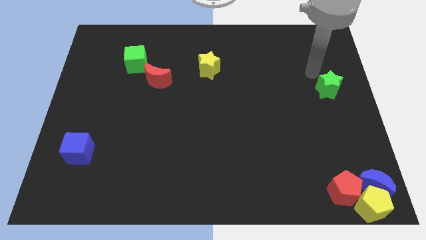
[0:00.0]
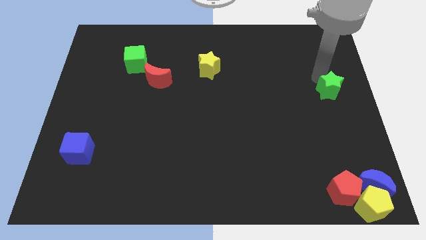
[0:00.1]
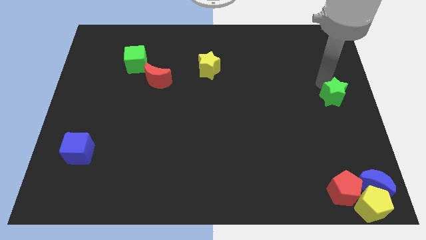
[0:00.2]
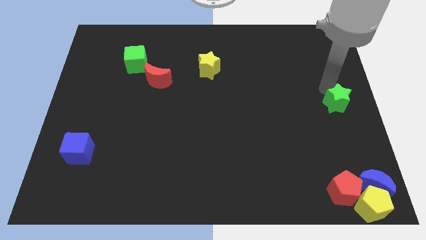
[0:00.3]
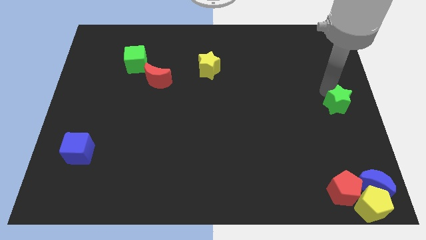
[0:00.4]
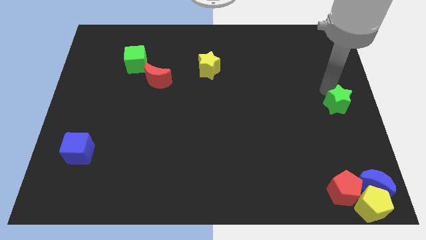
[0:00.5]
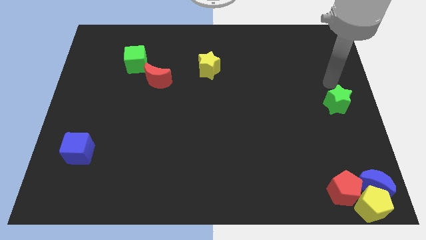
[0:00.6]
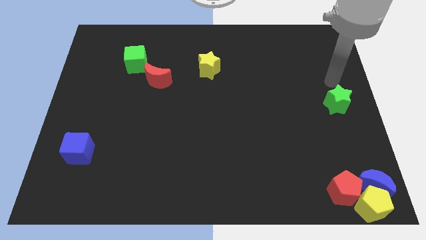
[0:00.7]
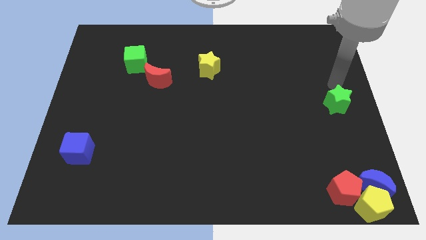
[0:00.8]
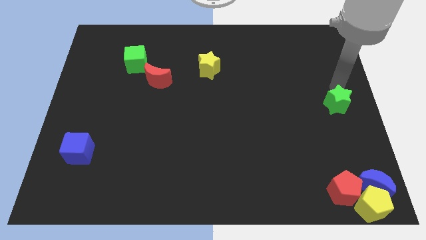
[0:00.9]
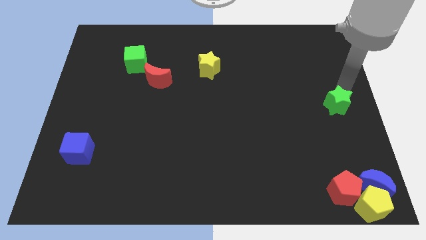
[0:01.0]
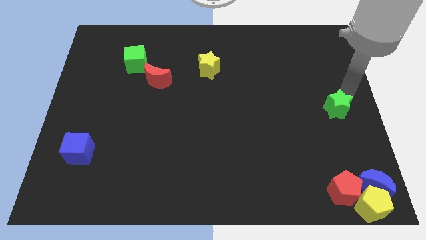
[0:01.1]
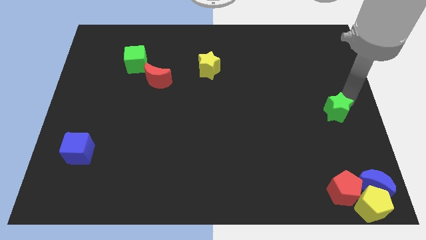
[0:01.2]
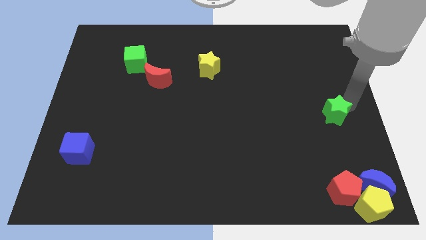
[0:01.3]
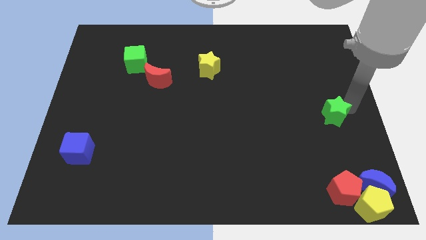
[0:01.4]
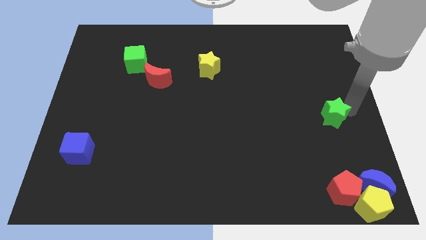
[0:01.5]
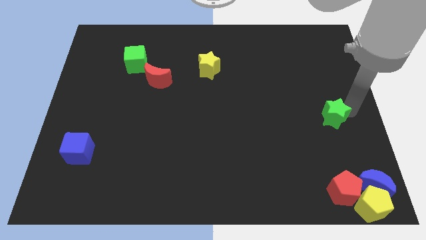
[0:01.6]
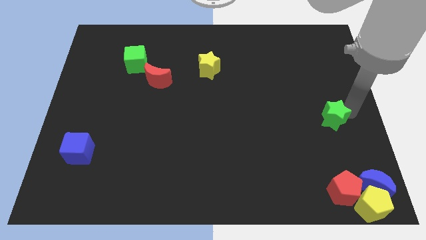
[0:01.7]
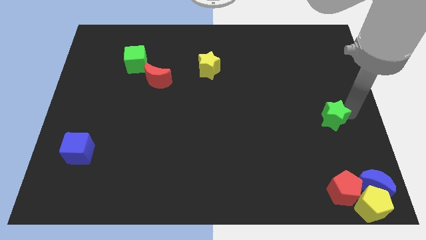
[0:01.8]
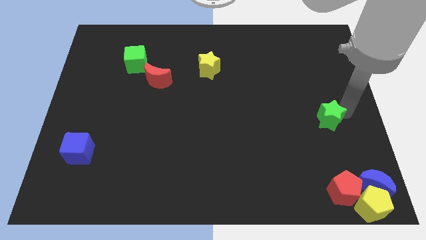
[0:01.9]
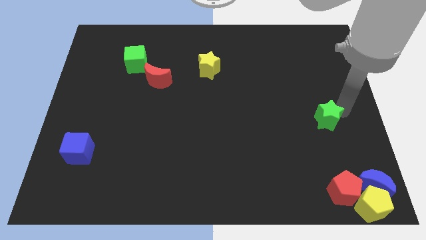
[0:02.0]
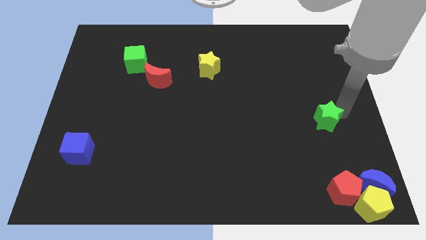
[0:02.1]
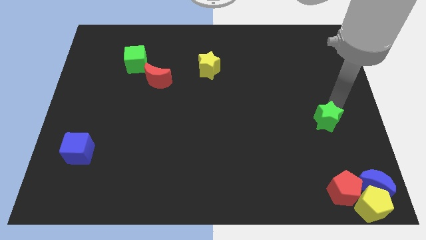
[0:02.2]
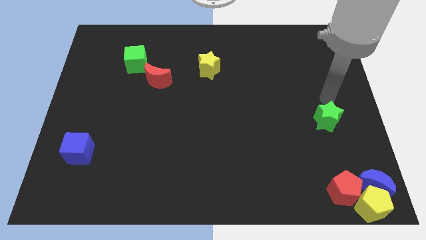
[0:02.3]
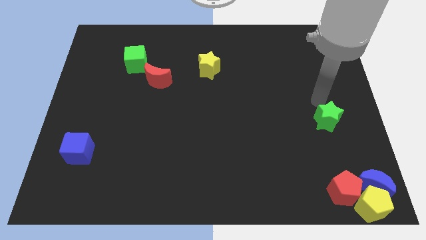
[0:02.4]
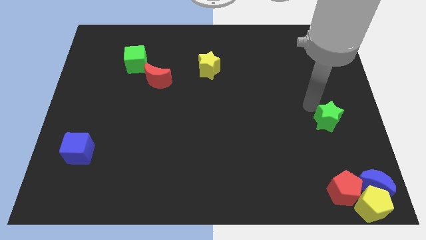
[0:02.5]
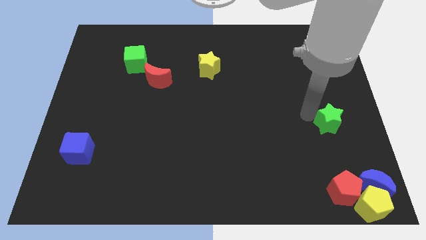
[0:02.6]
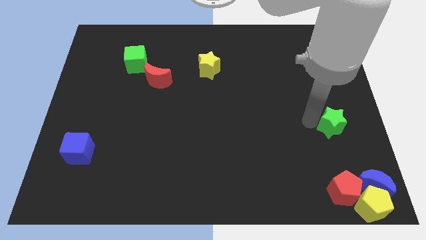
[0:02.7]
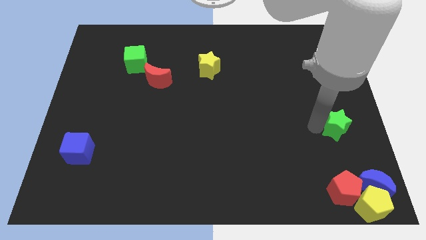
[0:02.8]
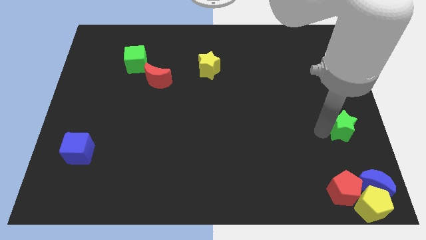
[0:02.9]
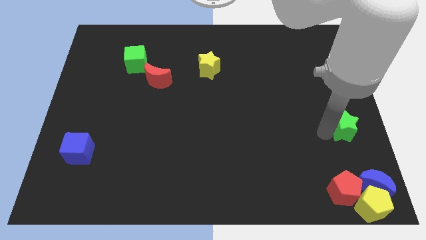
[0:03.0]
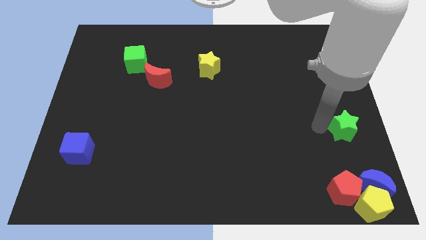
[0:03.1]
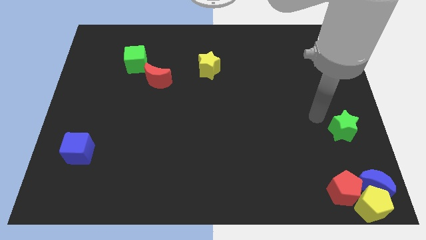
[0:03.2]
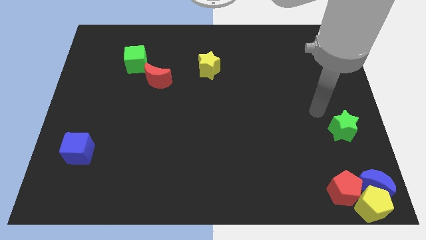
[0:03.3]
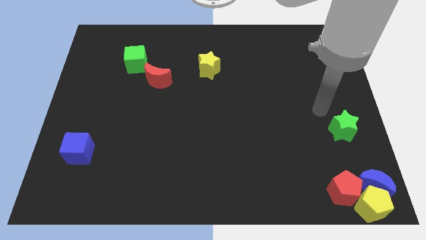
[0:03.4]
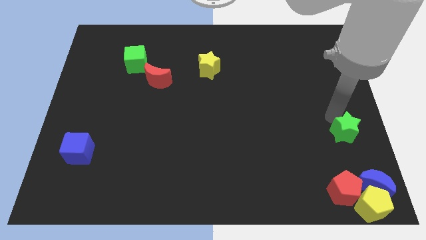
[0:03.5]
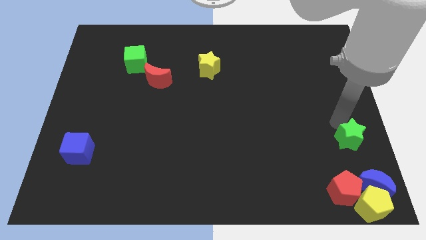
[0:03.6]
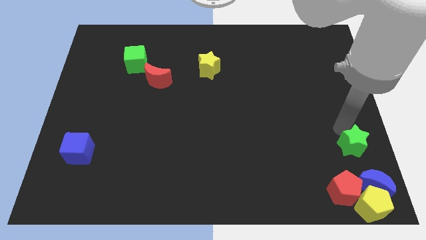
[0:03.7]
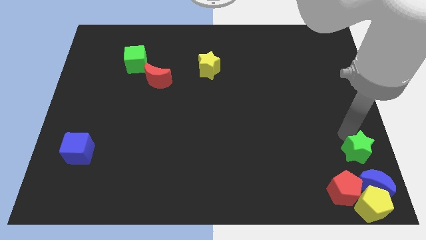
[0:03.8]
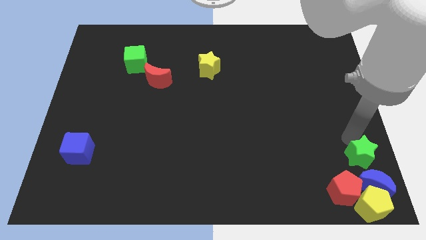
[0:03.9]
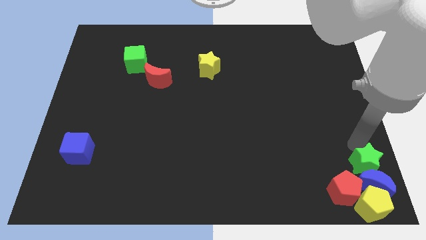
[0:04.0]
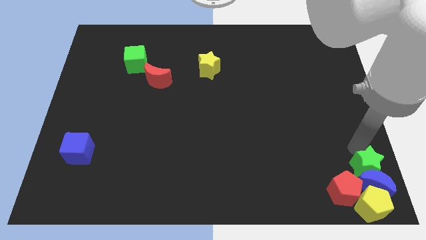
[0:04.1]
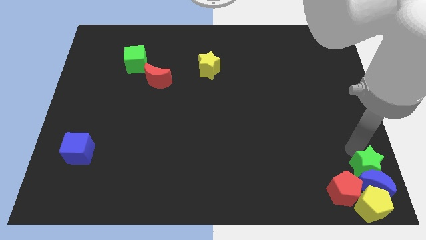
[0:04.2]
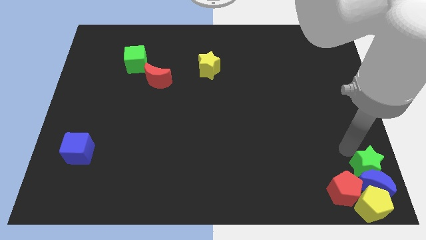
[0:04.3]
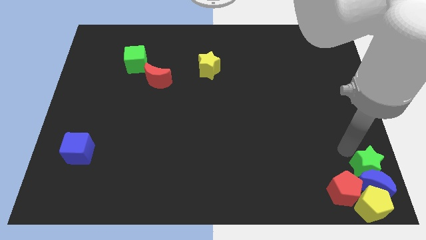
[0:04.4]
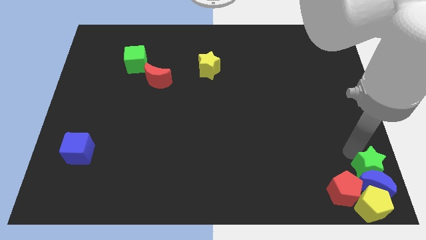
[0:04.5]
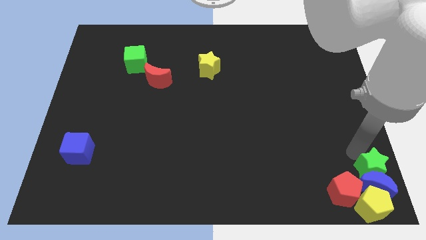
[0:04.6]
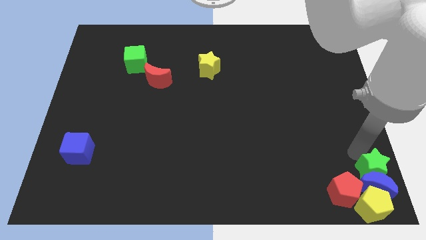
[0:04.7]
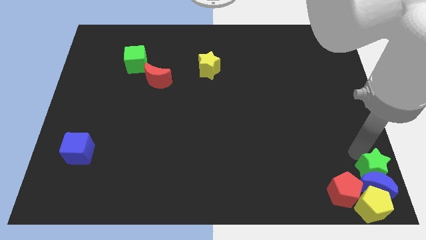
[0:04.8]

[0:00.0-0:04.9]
push the green star to the bottom right corner

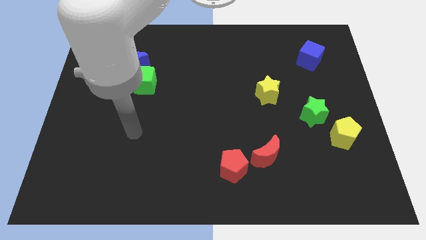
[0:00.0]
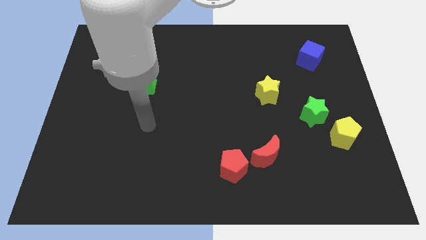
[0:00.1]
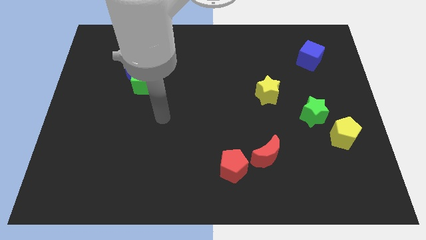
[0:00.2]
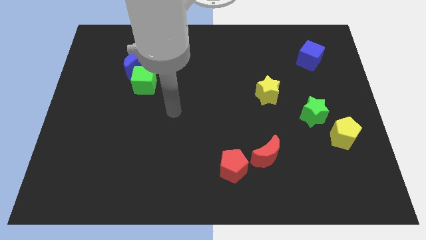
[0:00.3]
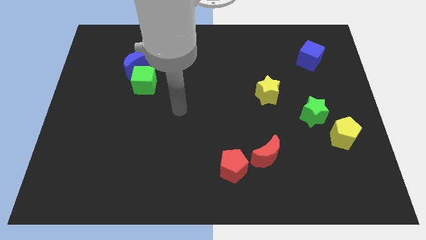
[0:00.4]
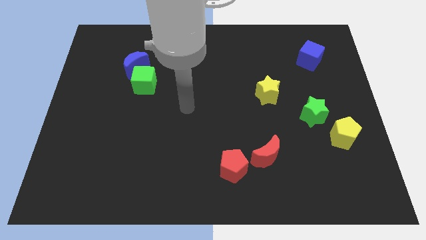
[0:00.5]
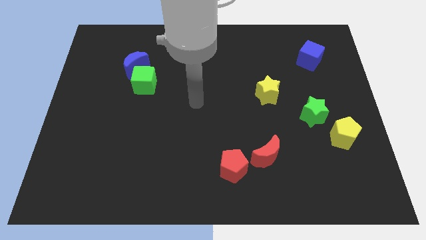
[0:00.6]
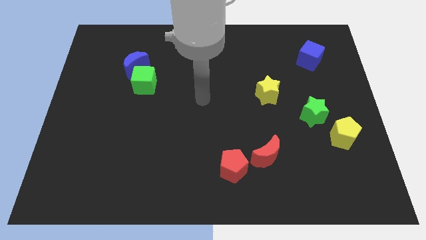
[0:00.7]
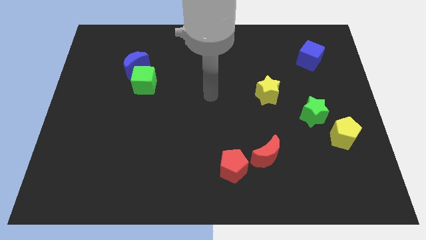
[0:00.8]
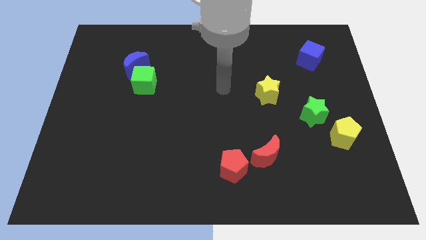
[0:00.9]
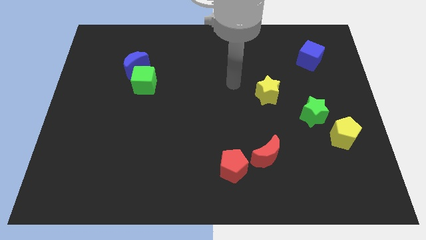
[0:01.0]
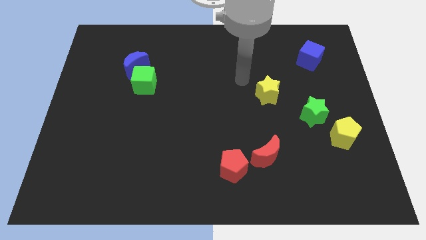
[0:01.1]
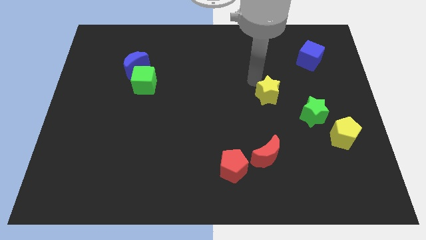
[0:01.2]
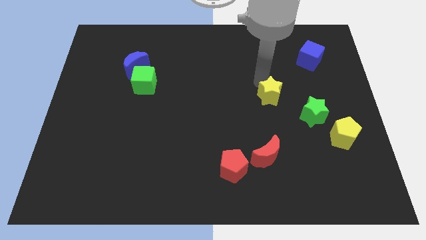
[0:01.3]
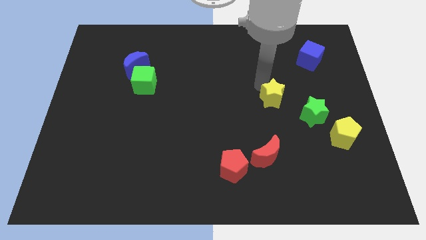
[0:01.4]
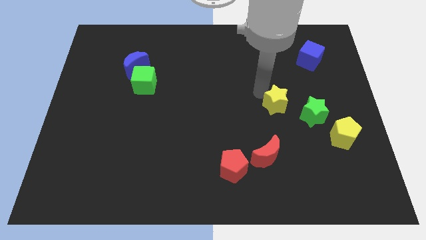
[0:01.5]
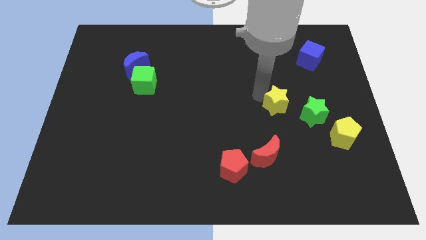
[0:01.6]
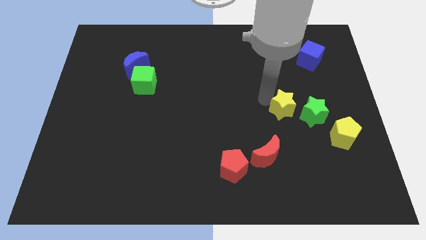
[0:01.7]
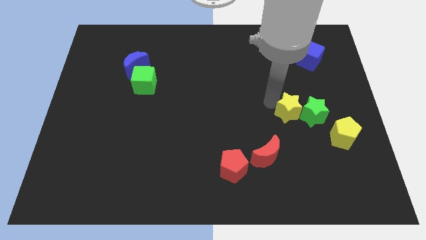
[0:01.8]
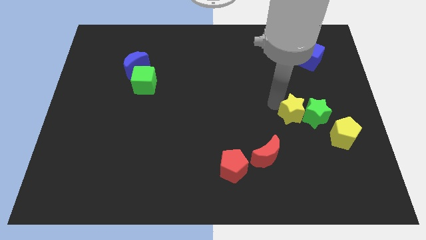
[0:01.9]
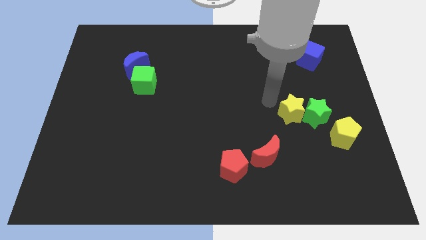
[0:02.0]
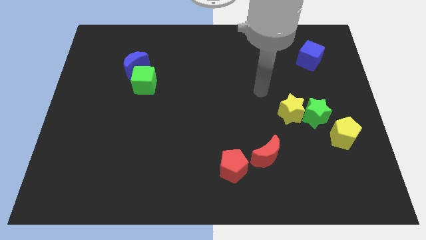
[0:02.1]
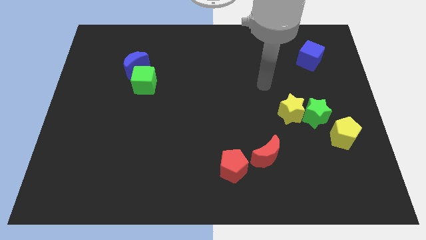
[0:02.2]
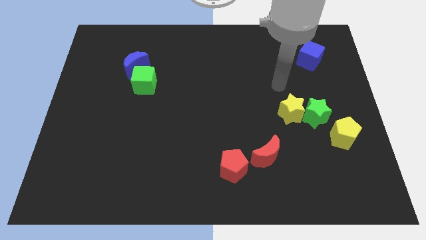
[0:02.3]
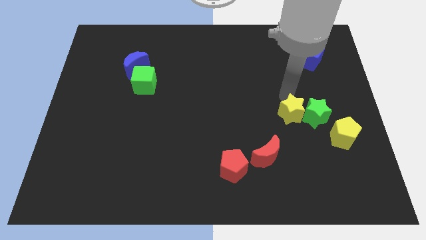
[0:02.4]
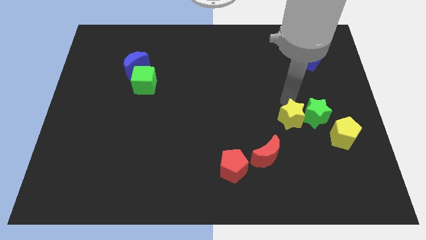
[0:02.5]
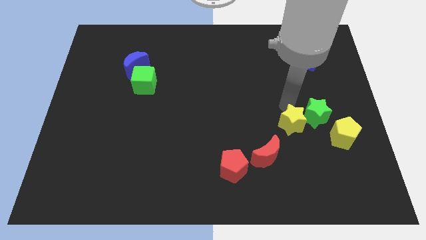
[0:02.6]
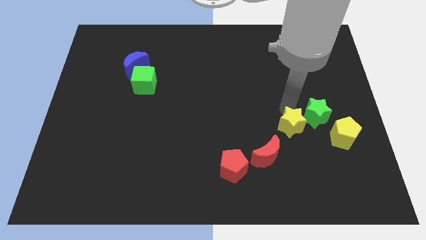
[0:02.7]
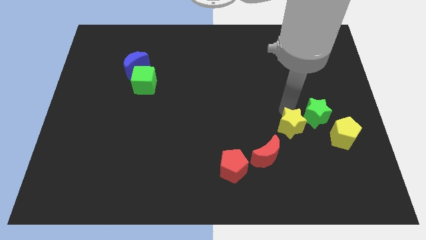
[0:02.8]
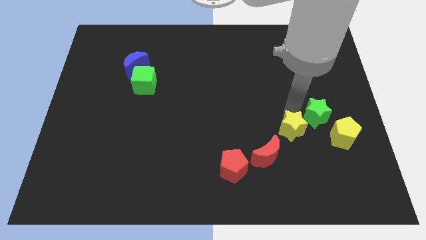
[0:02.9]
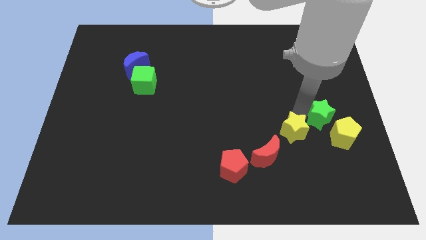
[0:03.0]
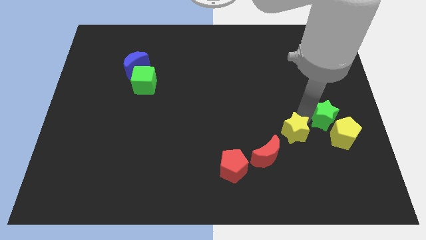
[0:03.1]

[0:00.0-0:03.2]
move yellow star towards the green star

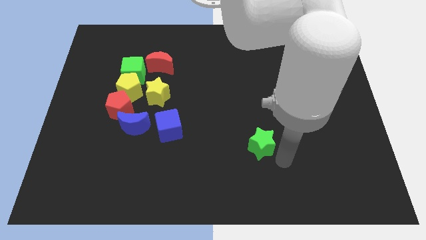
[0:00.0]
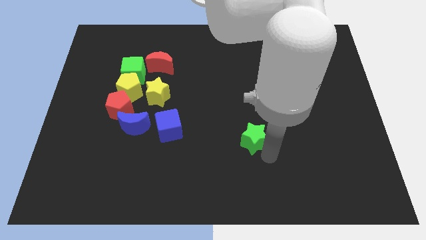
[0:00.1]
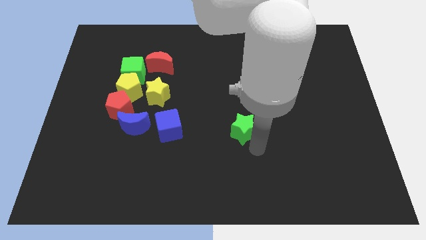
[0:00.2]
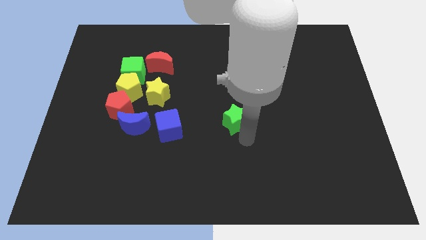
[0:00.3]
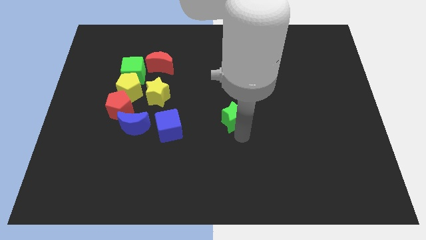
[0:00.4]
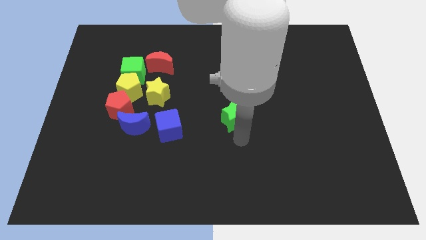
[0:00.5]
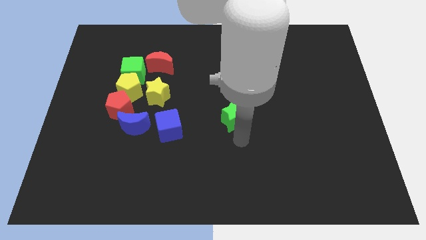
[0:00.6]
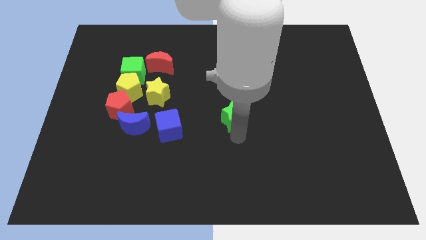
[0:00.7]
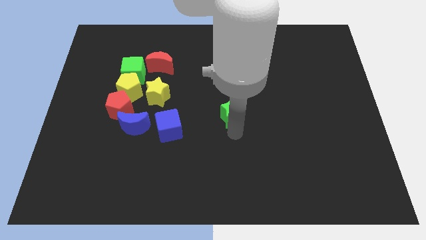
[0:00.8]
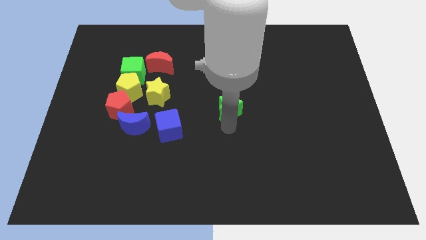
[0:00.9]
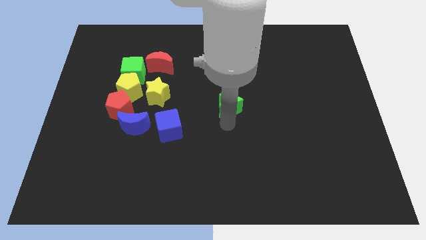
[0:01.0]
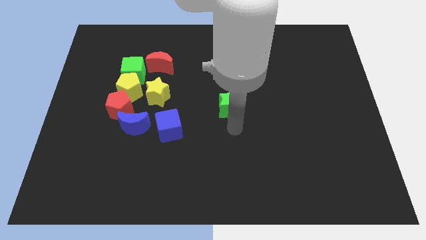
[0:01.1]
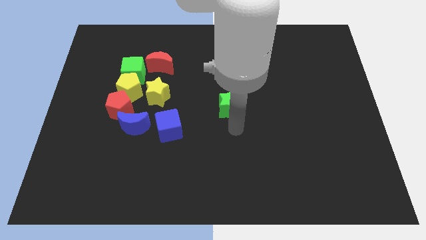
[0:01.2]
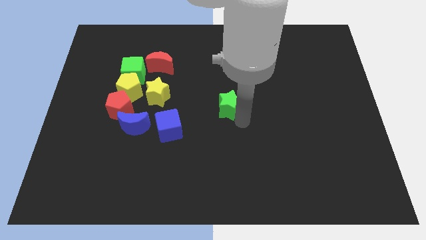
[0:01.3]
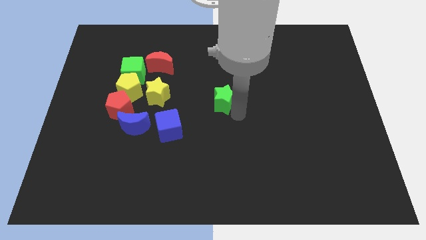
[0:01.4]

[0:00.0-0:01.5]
push the green star to the center of the board
